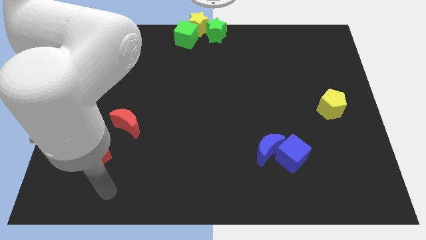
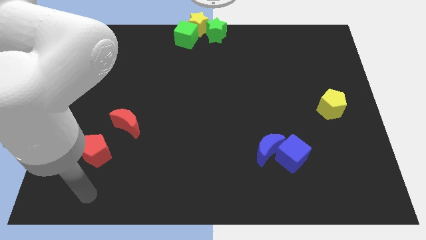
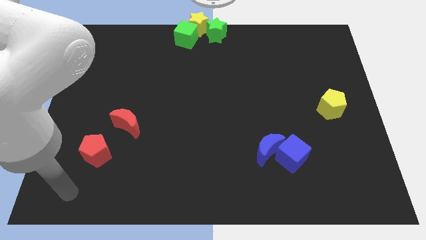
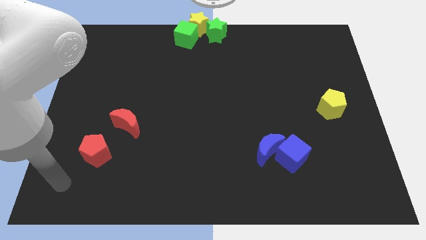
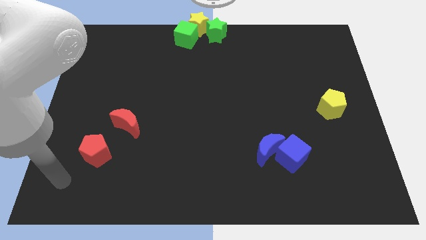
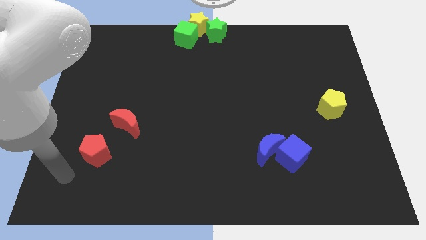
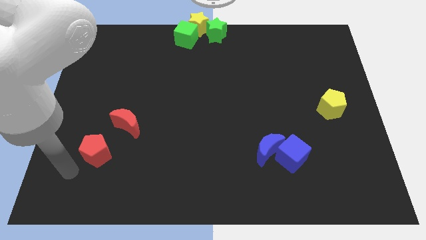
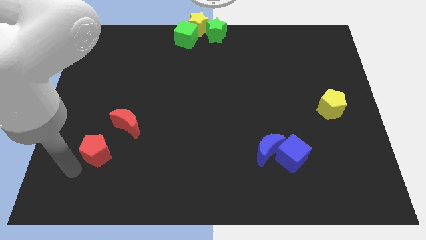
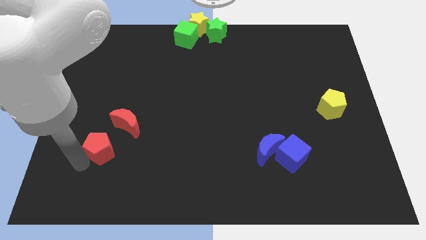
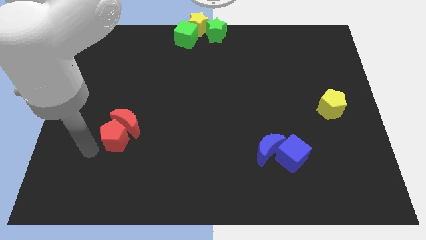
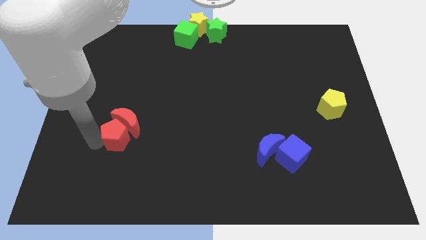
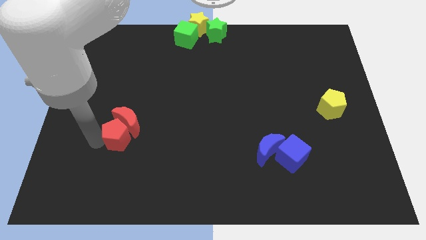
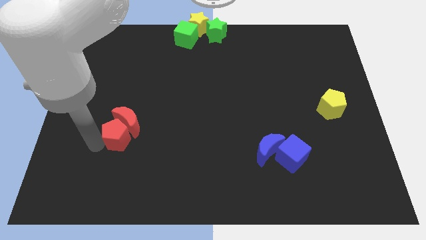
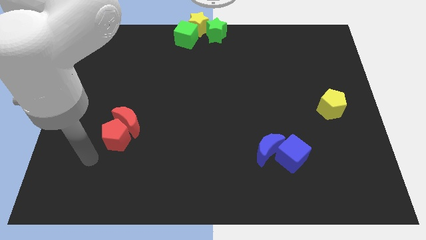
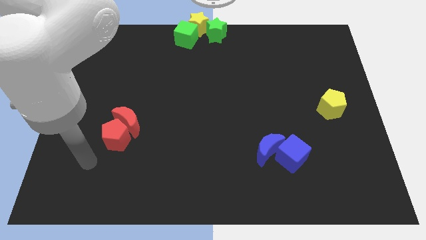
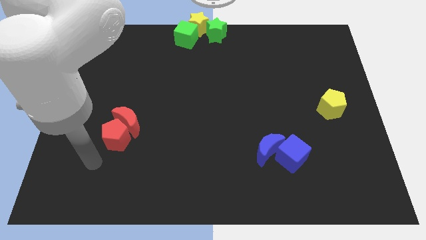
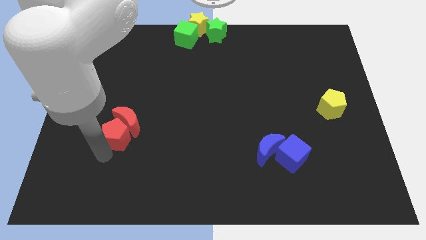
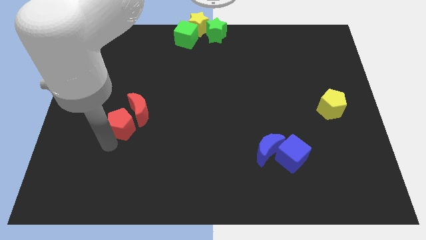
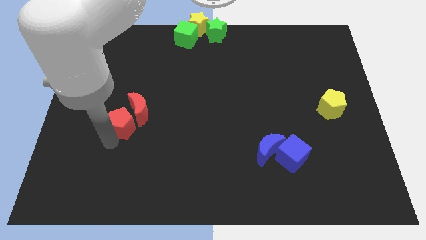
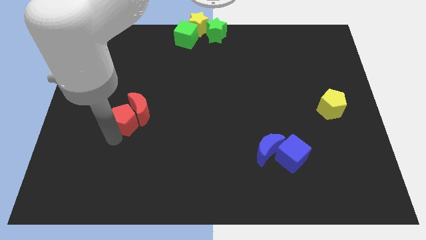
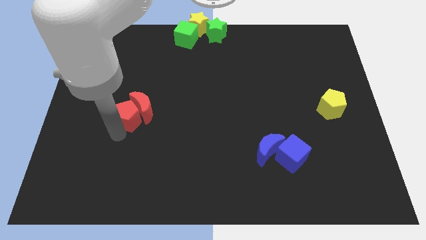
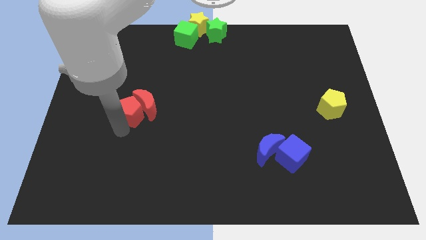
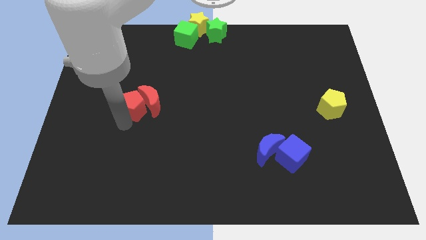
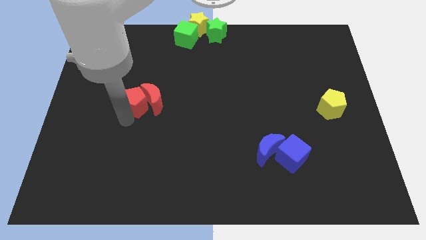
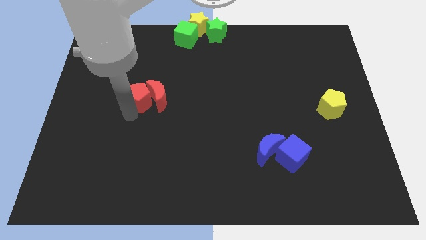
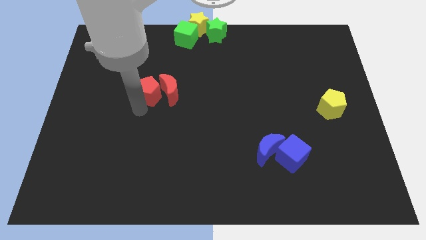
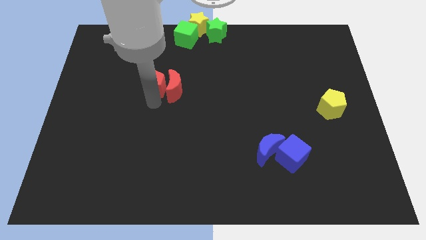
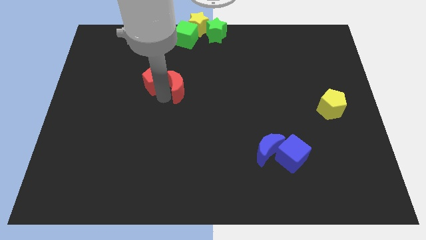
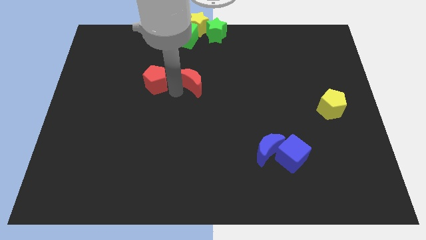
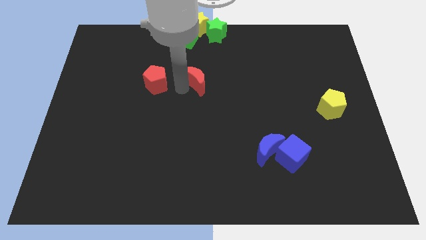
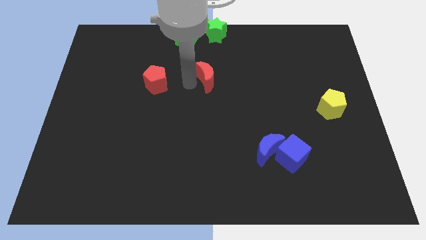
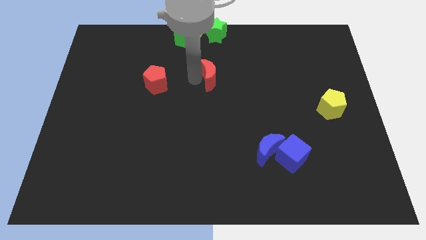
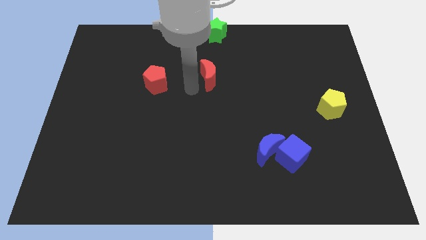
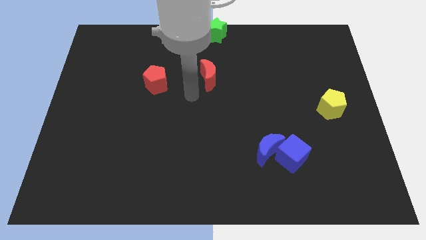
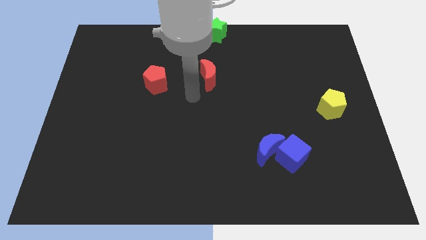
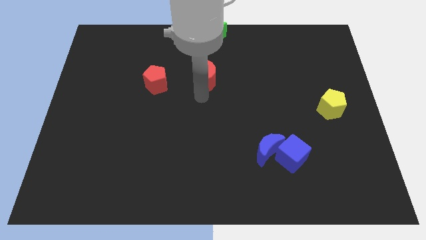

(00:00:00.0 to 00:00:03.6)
move the red pentagon upwards along with the red crescent

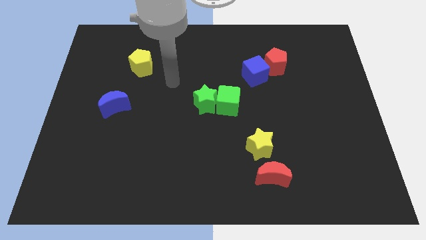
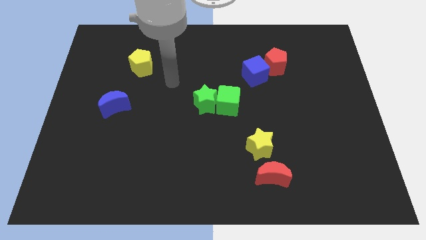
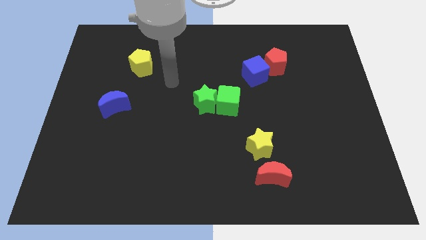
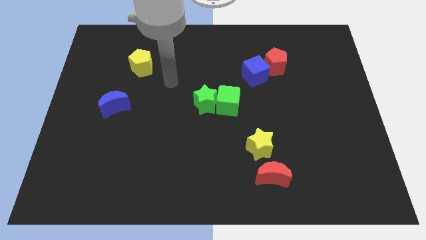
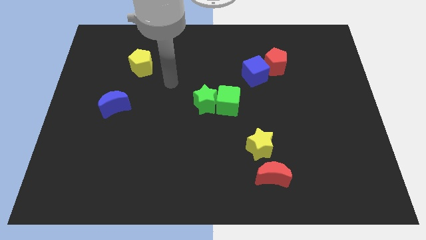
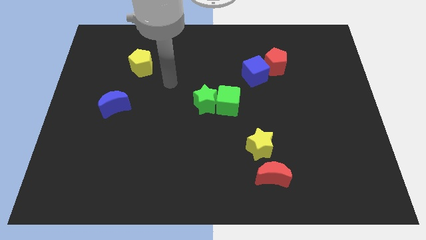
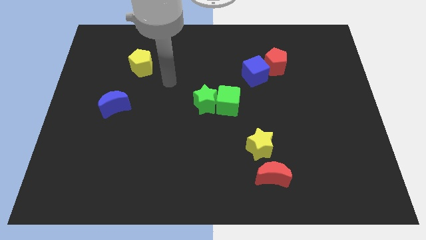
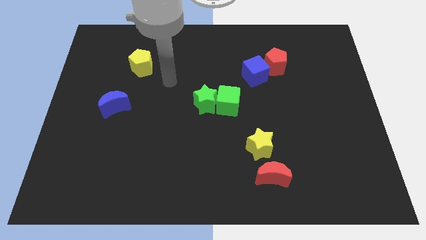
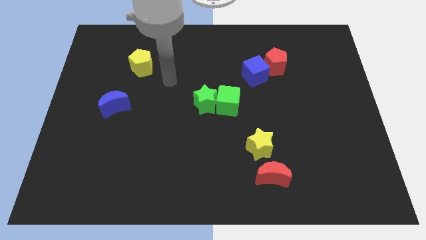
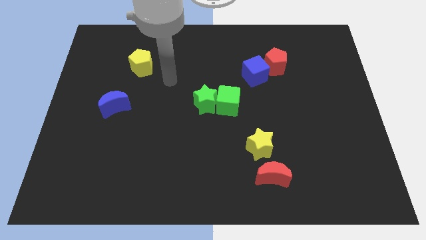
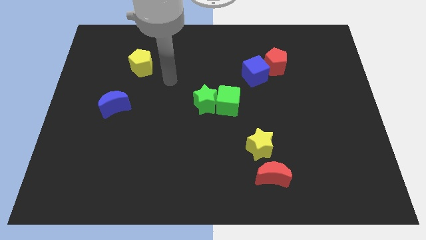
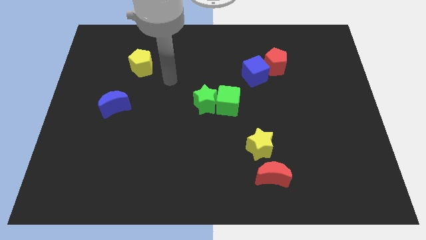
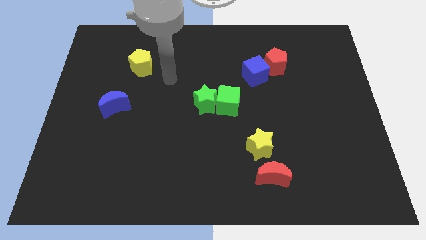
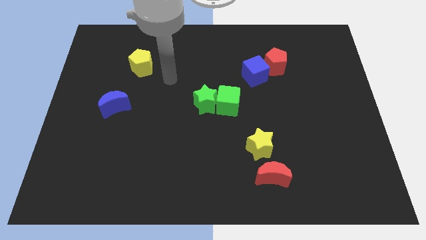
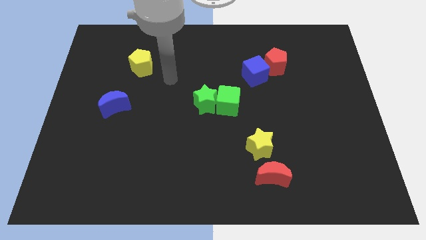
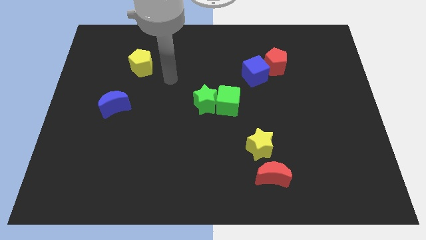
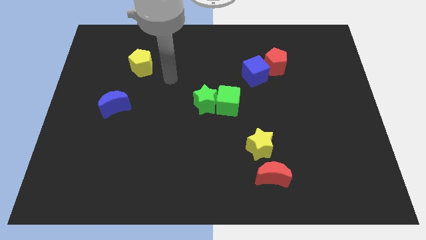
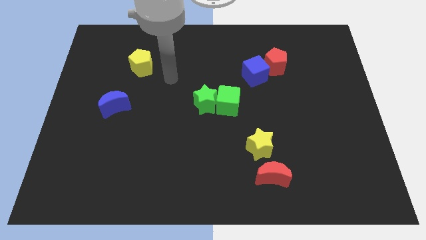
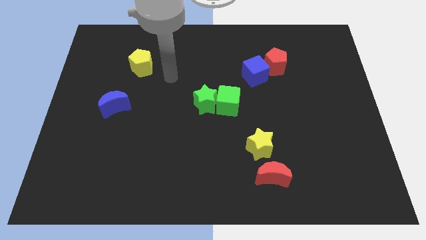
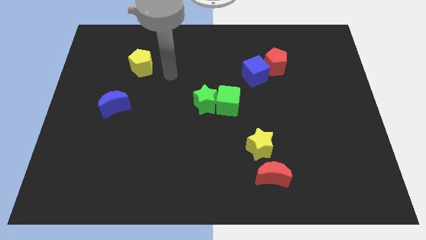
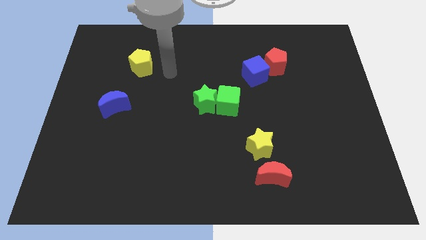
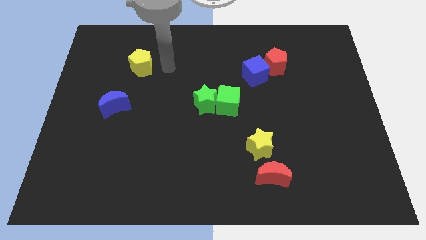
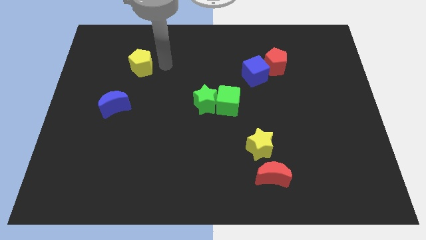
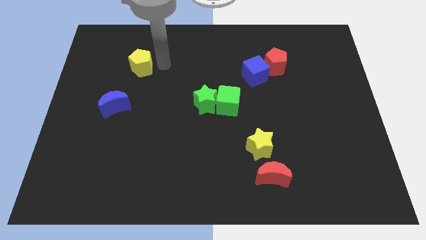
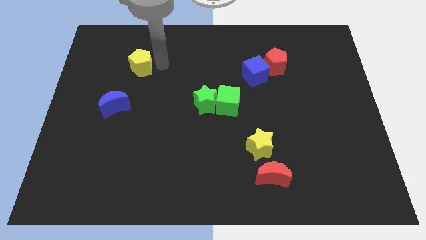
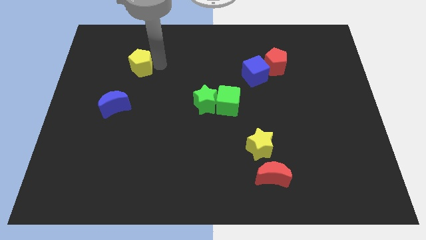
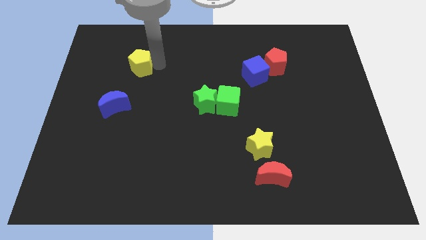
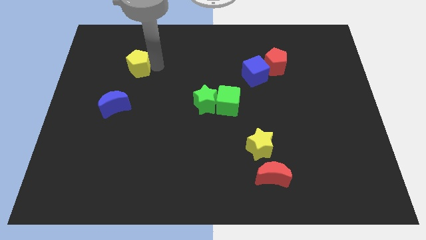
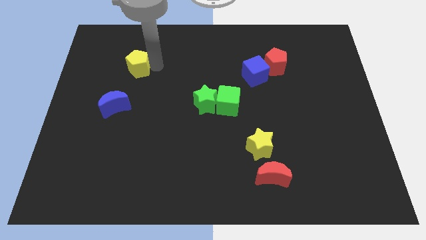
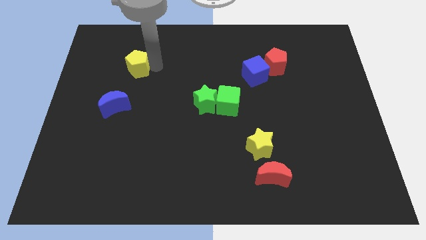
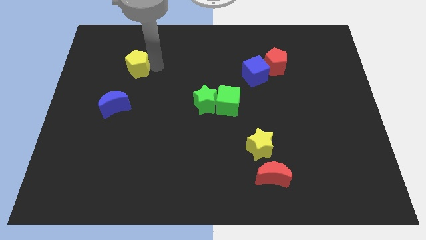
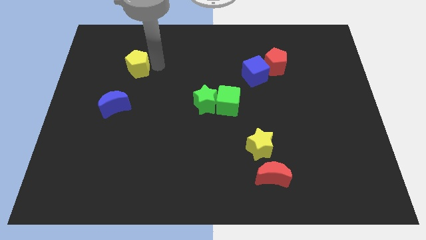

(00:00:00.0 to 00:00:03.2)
slightly push the yellow pentagon to the left side of the board

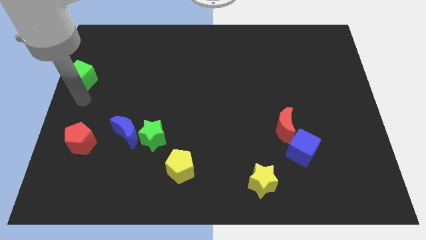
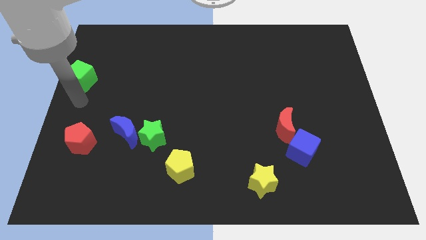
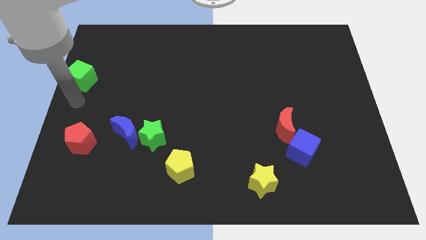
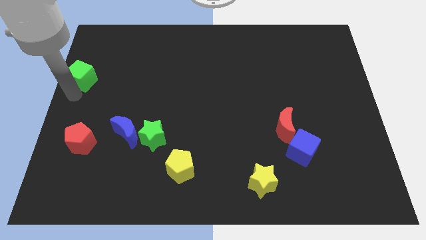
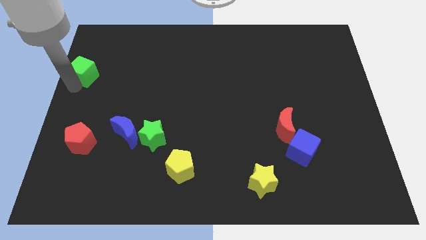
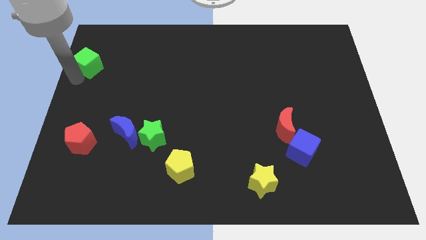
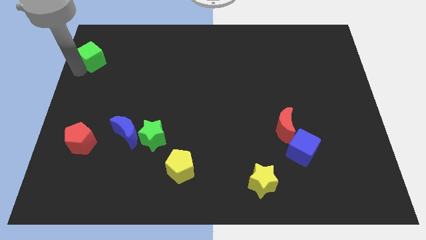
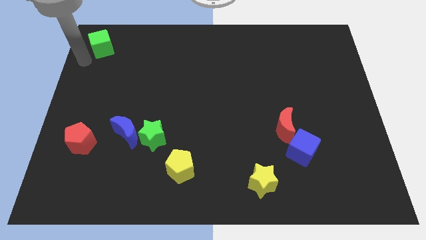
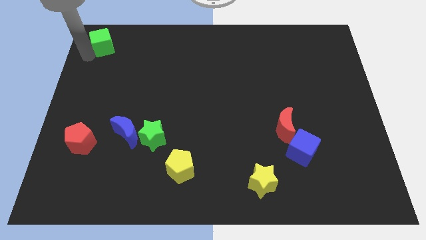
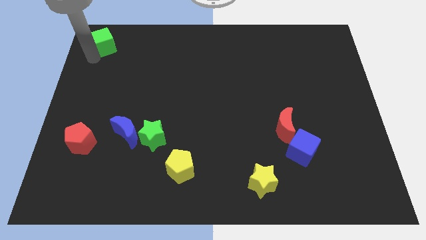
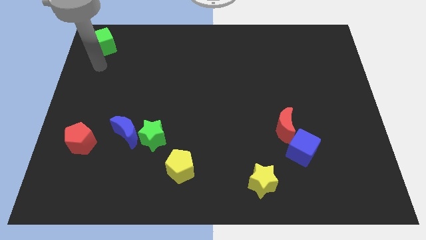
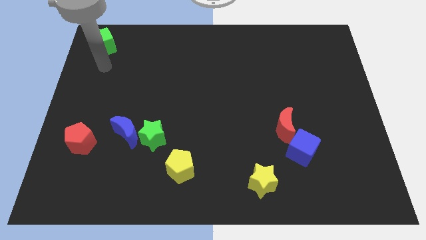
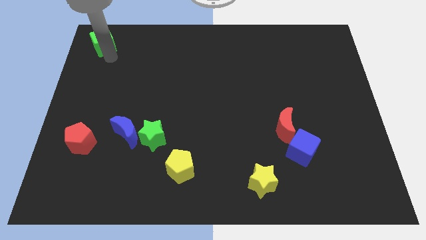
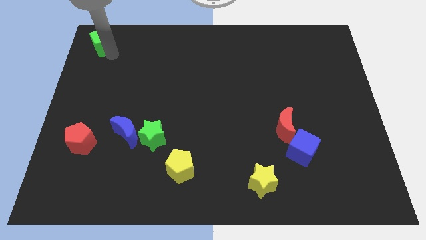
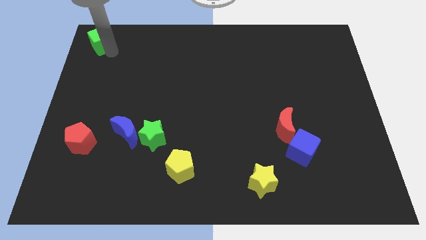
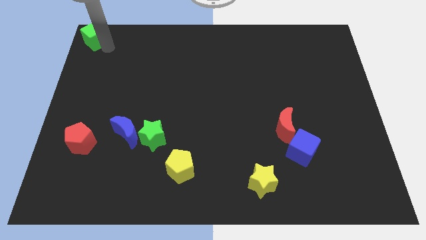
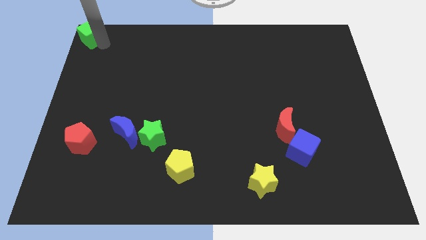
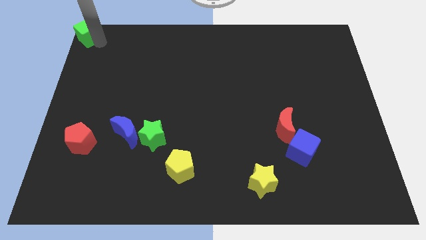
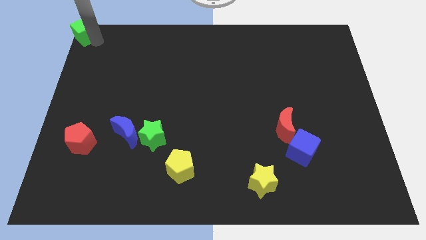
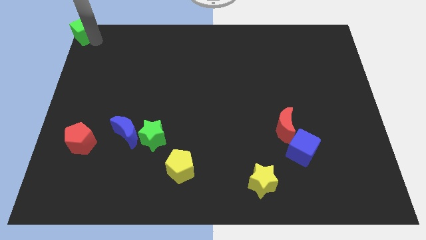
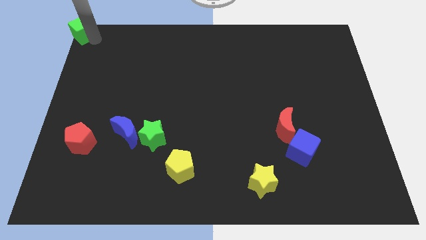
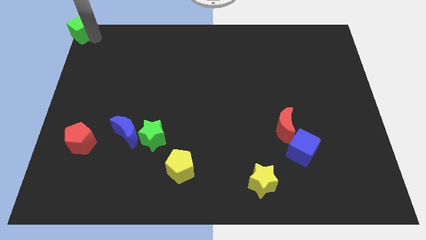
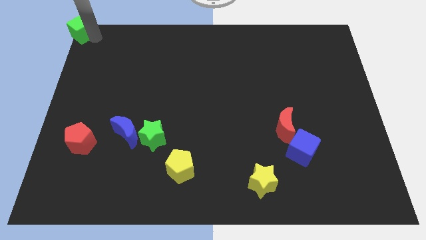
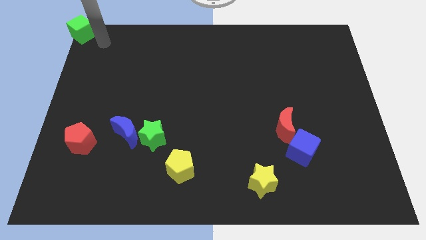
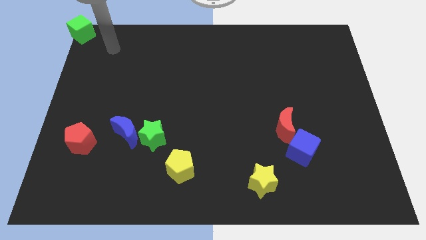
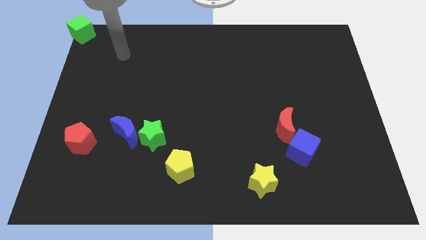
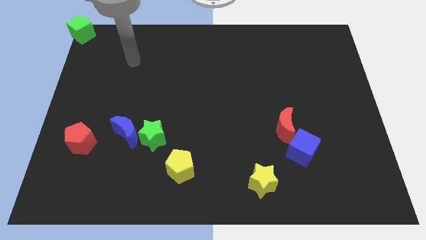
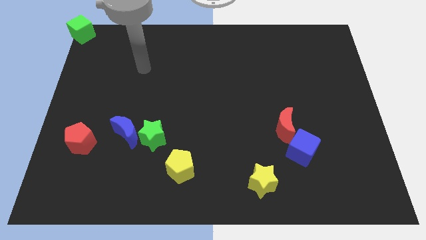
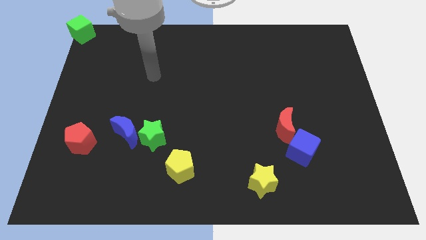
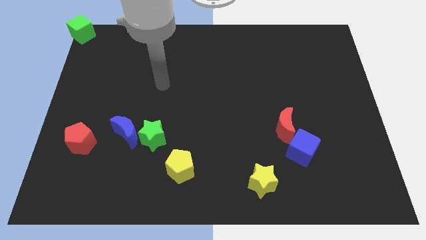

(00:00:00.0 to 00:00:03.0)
place the green cube to the top left corner of the board
